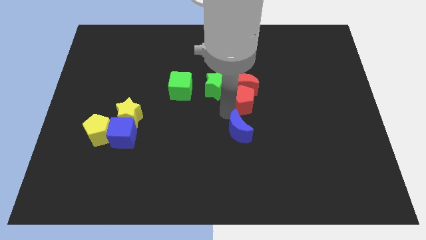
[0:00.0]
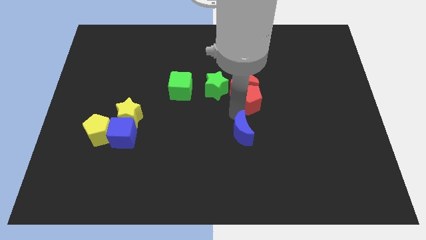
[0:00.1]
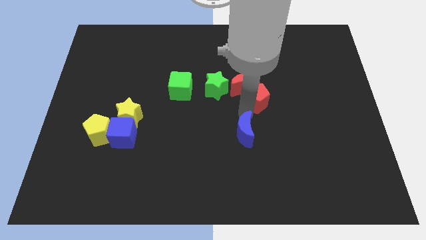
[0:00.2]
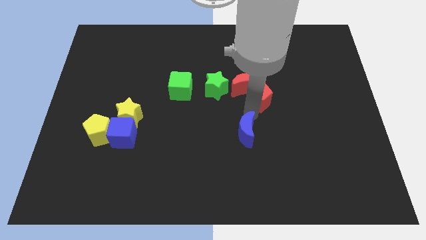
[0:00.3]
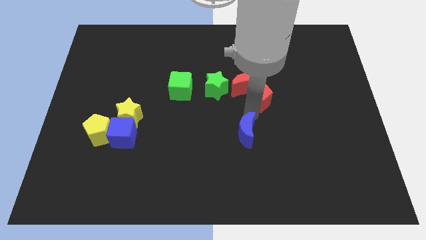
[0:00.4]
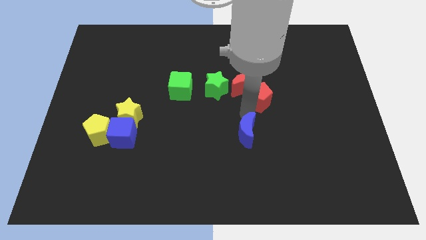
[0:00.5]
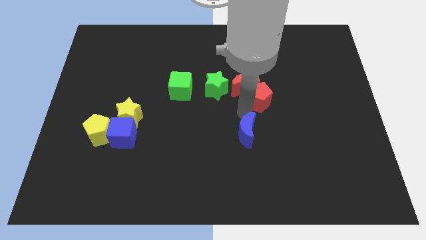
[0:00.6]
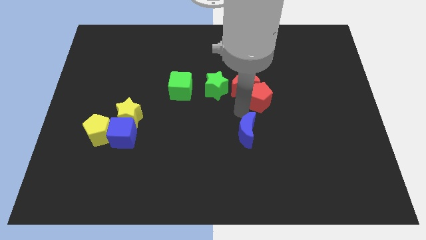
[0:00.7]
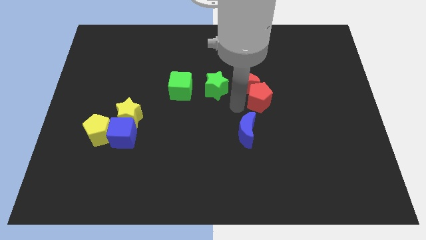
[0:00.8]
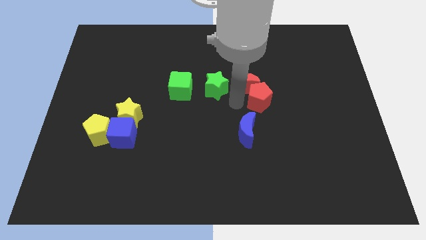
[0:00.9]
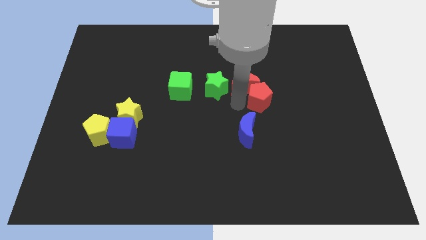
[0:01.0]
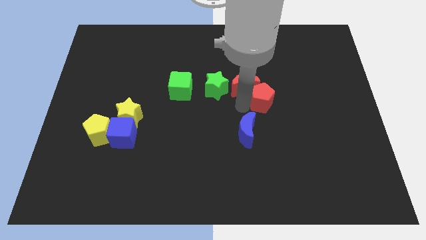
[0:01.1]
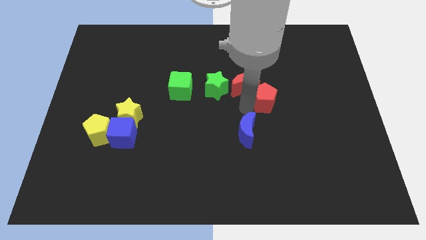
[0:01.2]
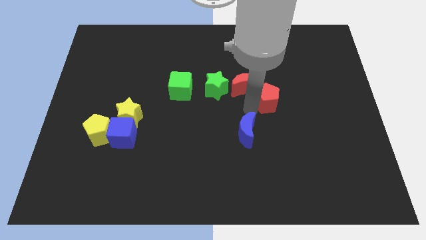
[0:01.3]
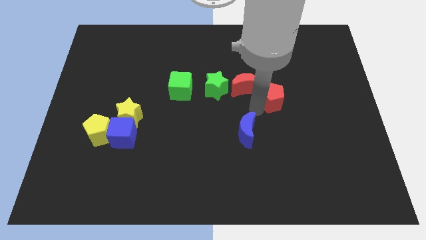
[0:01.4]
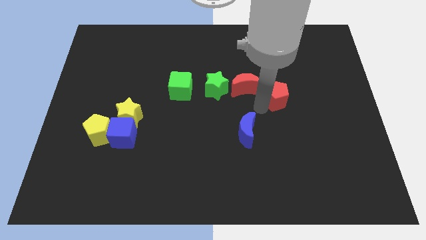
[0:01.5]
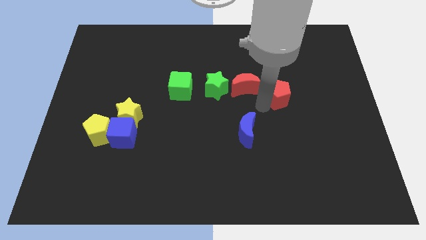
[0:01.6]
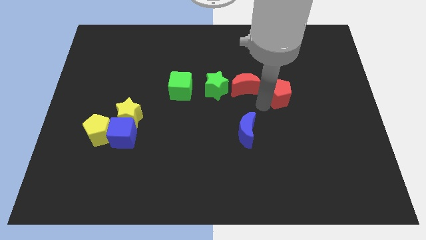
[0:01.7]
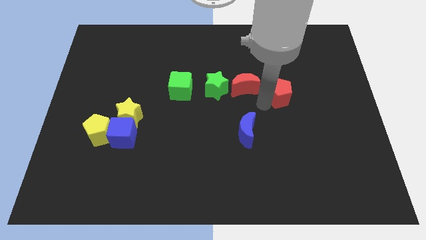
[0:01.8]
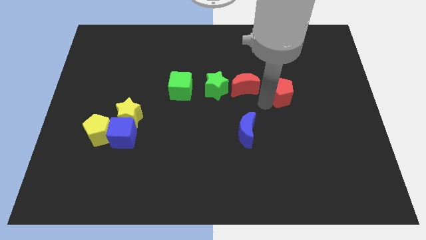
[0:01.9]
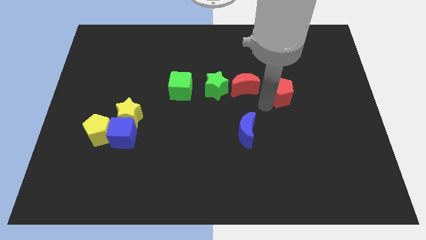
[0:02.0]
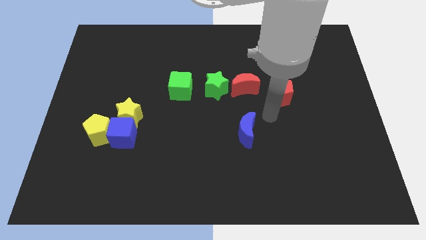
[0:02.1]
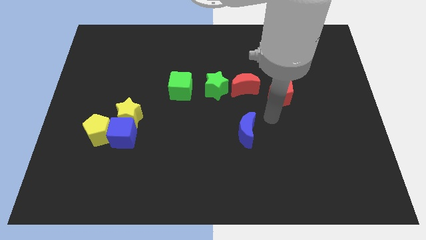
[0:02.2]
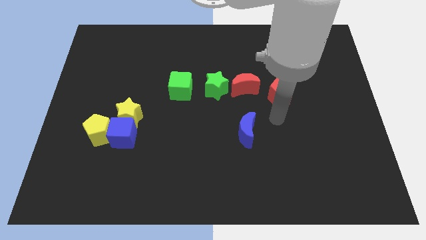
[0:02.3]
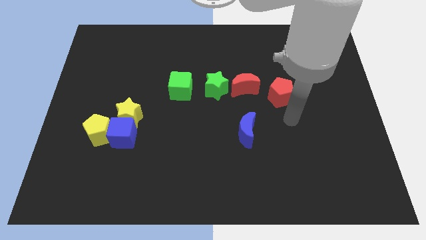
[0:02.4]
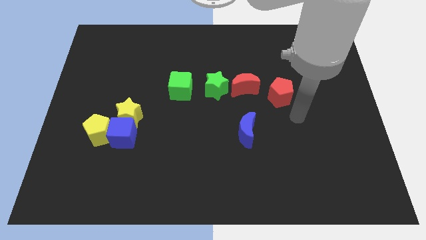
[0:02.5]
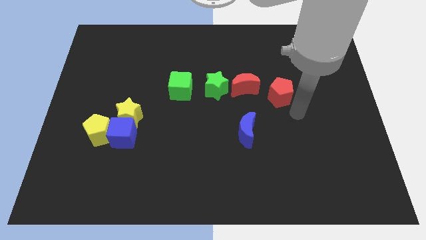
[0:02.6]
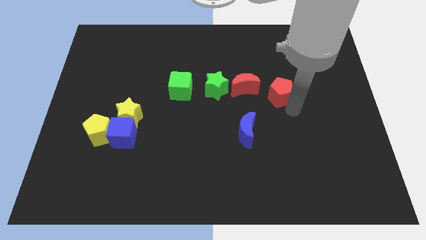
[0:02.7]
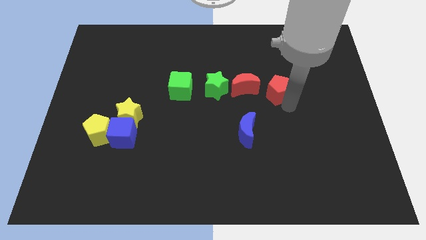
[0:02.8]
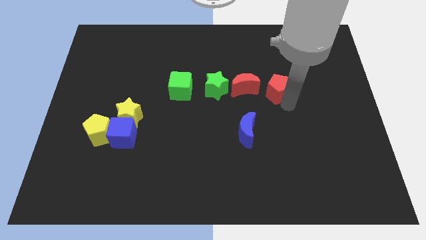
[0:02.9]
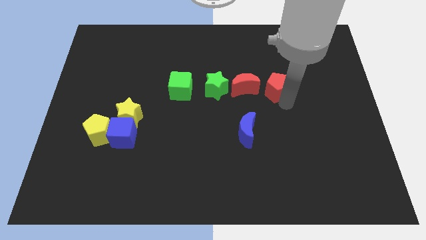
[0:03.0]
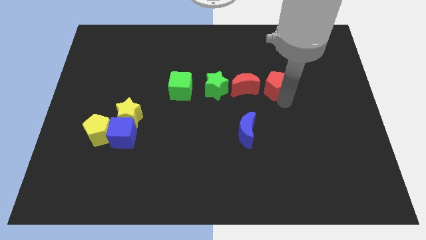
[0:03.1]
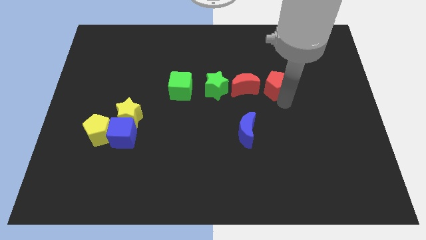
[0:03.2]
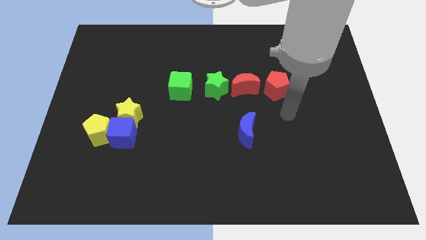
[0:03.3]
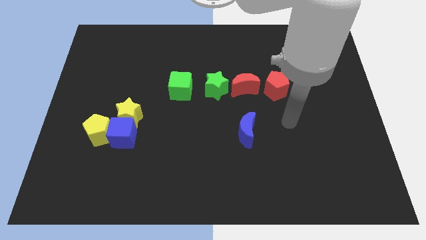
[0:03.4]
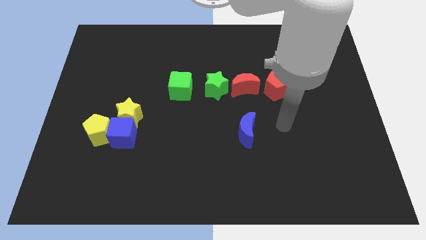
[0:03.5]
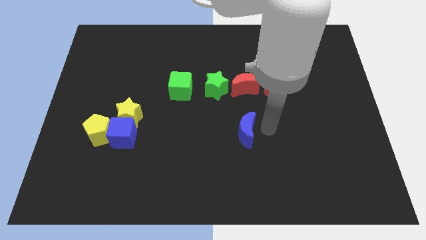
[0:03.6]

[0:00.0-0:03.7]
separate red pentagon from the red moon

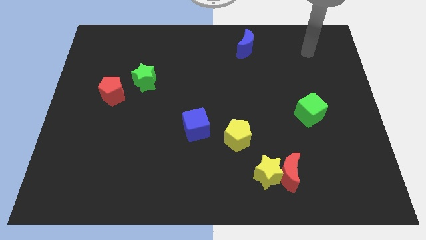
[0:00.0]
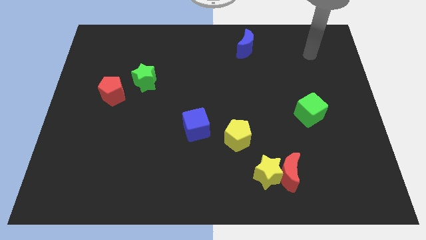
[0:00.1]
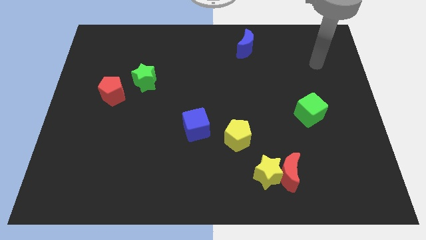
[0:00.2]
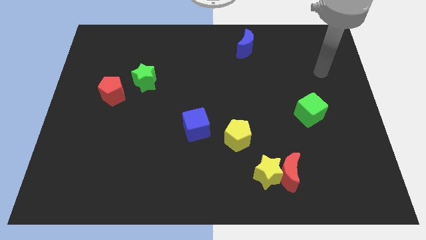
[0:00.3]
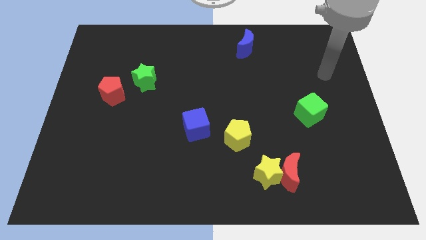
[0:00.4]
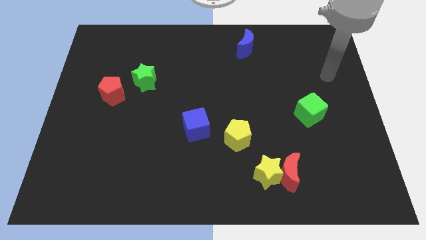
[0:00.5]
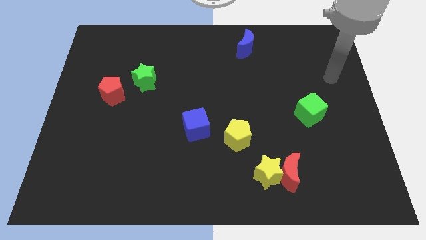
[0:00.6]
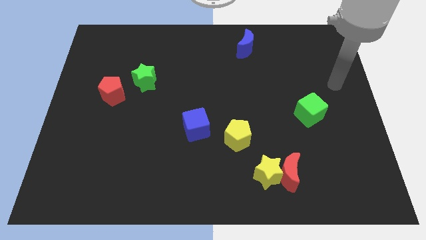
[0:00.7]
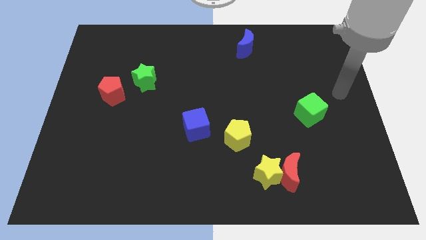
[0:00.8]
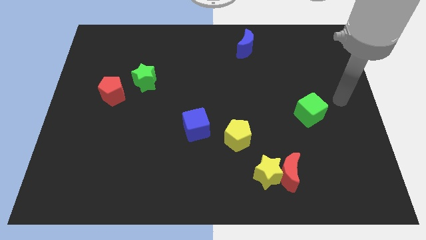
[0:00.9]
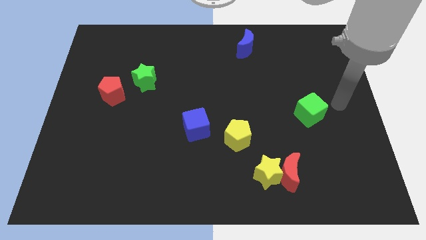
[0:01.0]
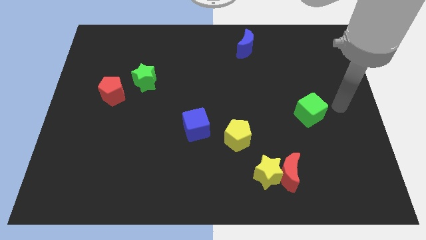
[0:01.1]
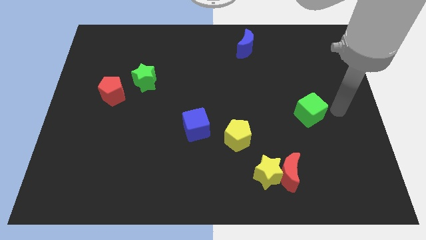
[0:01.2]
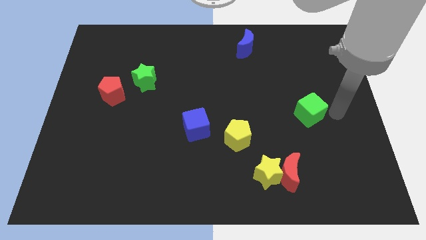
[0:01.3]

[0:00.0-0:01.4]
put your arm to the right side of green cube

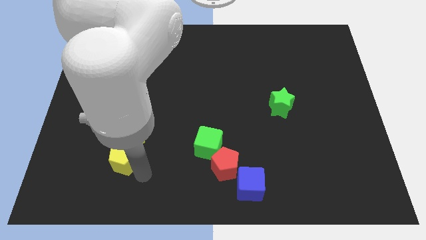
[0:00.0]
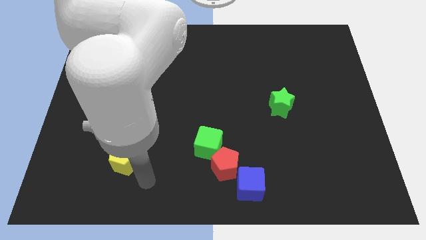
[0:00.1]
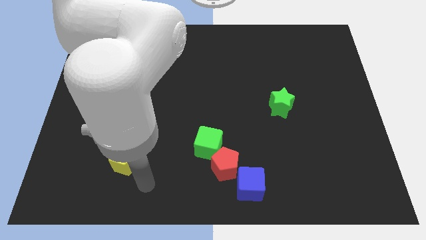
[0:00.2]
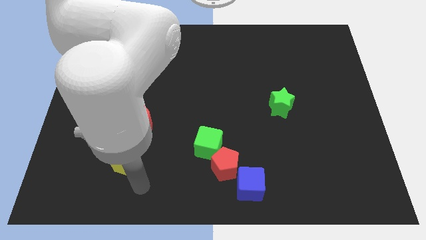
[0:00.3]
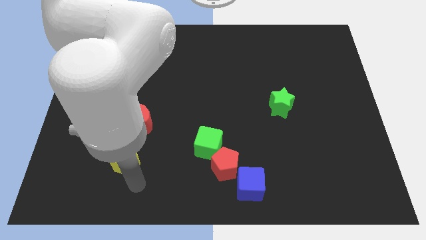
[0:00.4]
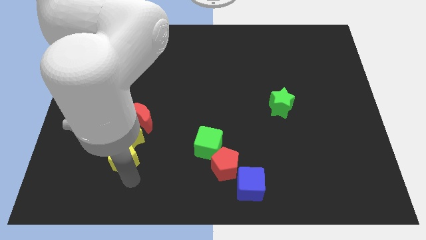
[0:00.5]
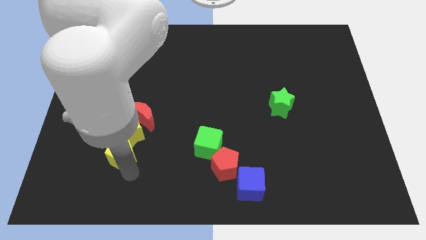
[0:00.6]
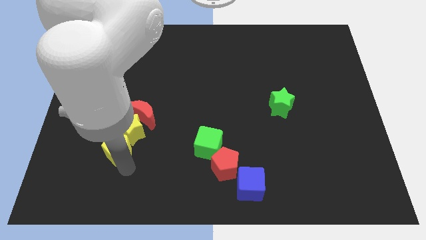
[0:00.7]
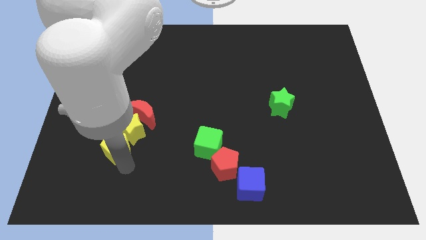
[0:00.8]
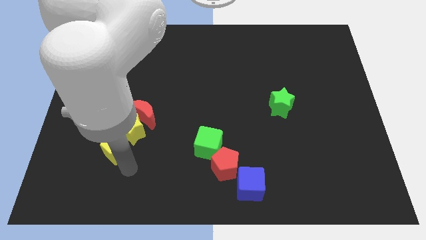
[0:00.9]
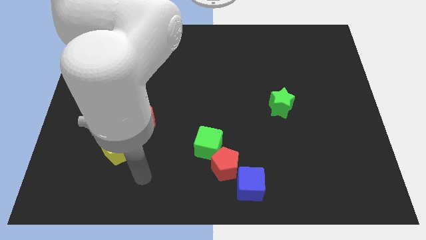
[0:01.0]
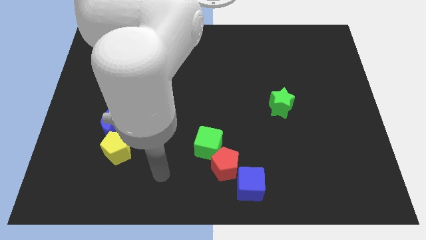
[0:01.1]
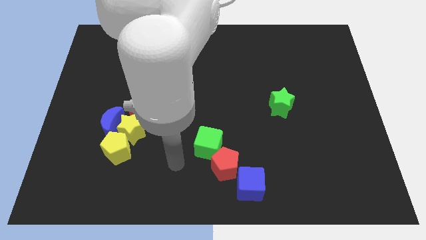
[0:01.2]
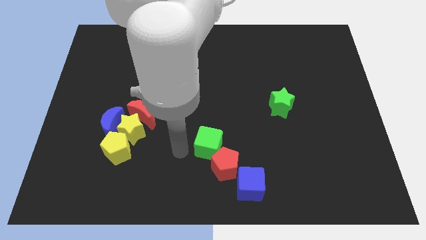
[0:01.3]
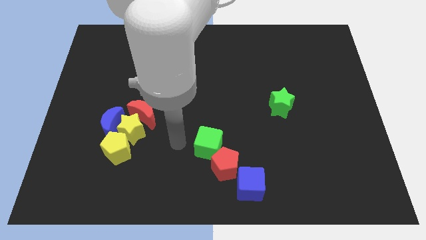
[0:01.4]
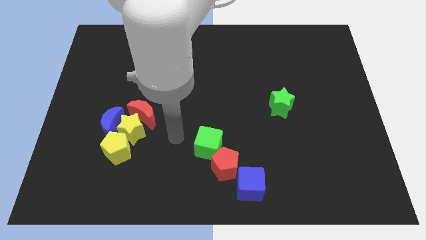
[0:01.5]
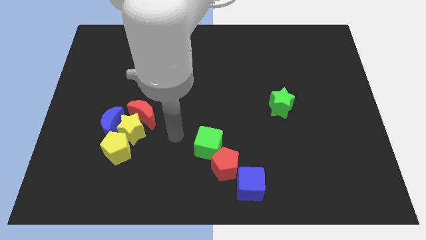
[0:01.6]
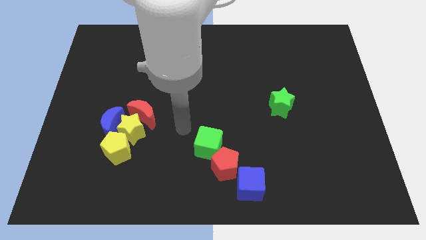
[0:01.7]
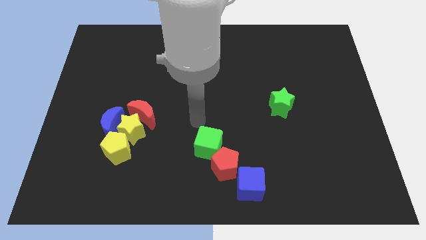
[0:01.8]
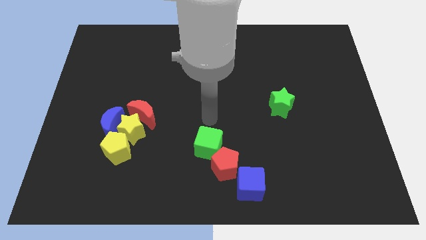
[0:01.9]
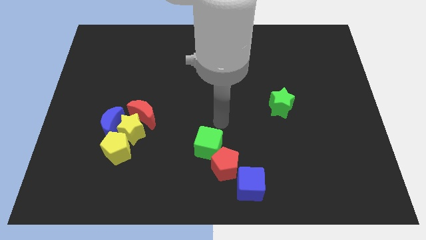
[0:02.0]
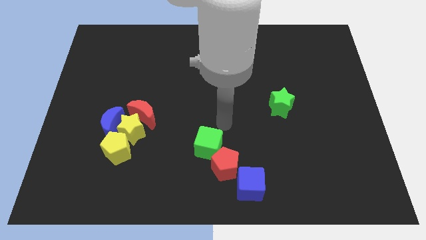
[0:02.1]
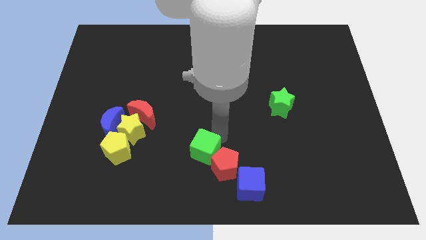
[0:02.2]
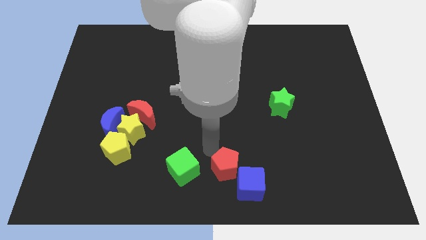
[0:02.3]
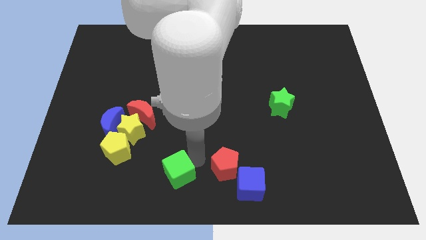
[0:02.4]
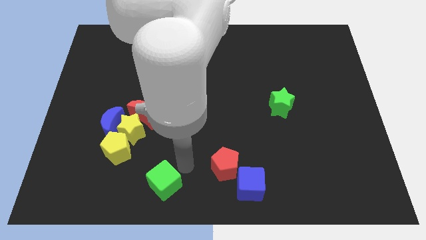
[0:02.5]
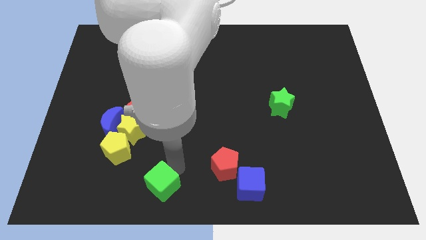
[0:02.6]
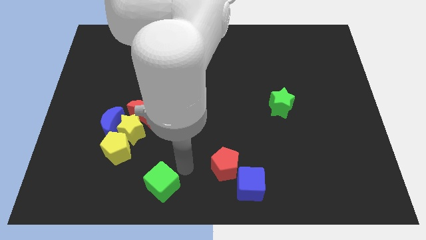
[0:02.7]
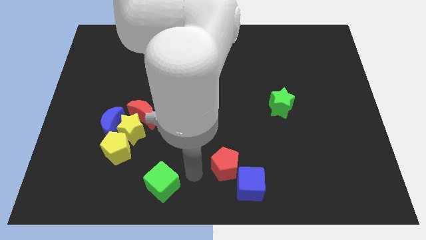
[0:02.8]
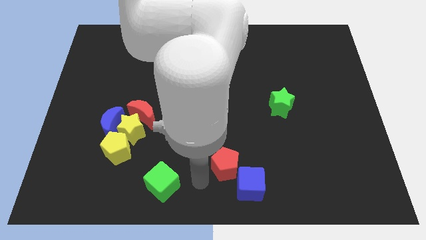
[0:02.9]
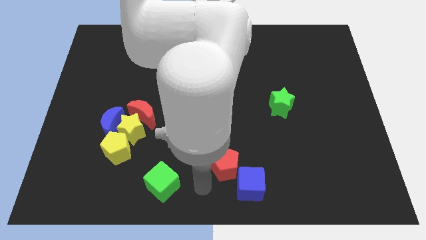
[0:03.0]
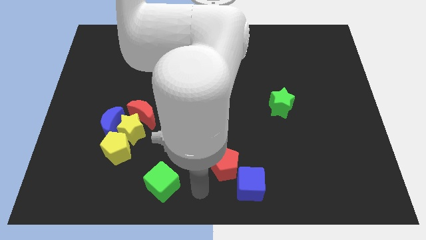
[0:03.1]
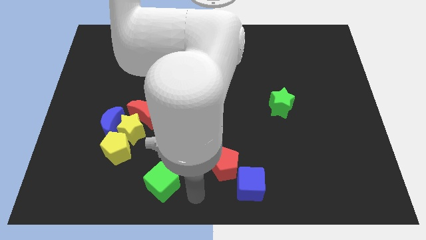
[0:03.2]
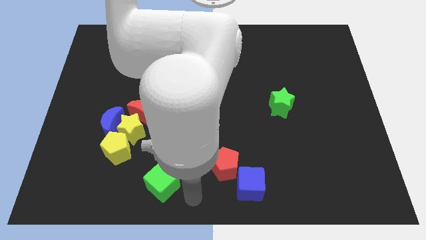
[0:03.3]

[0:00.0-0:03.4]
separate the green cube from the red pentagon

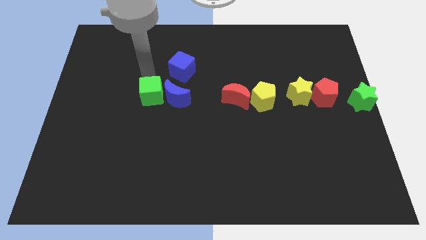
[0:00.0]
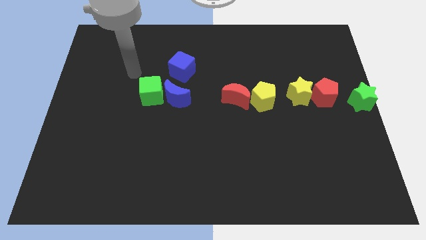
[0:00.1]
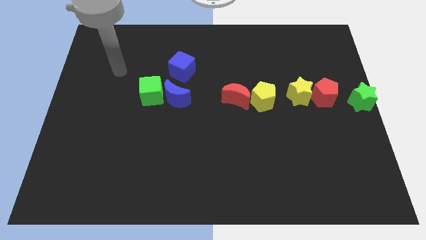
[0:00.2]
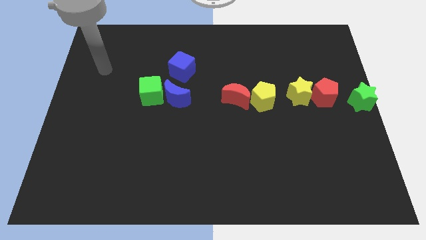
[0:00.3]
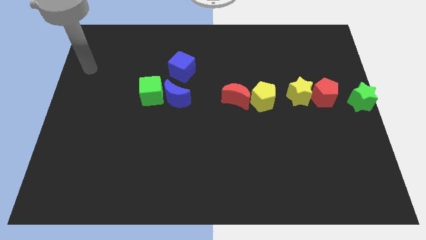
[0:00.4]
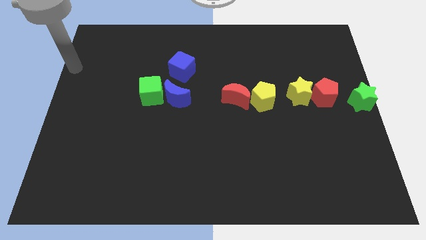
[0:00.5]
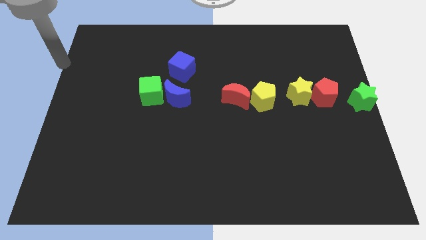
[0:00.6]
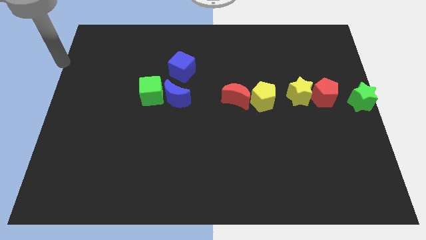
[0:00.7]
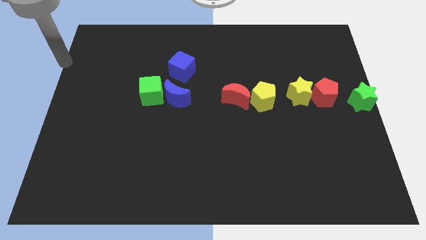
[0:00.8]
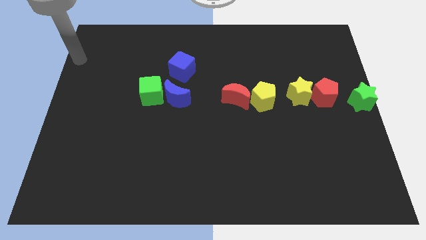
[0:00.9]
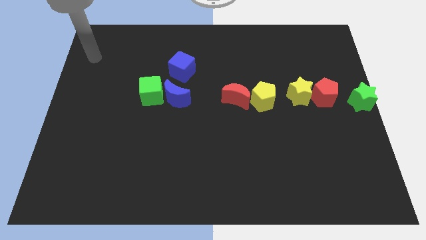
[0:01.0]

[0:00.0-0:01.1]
go away from the green cube
